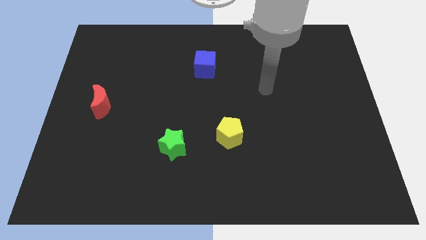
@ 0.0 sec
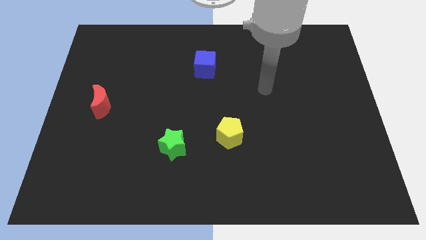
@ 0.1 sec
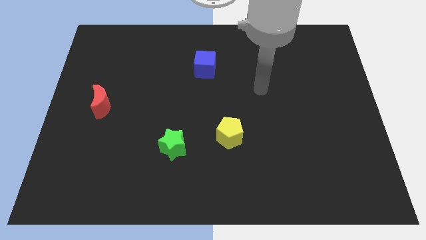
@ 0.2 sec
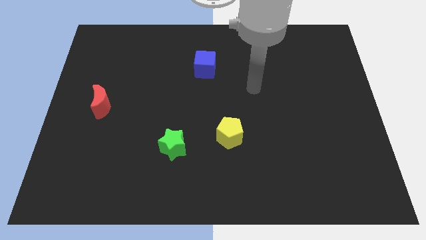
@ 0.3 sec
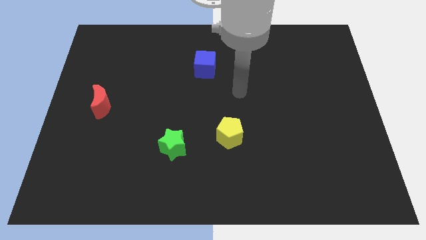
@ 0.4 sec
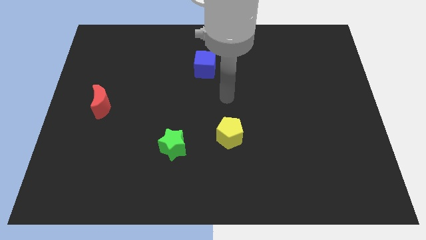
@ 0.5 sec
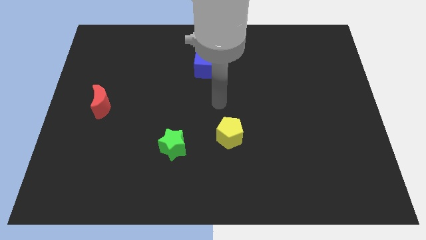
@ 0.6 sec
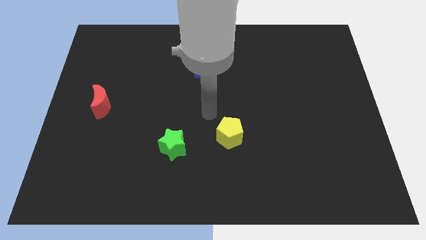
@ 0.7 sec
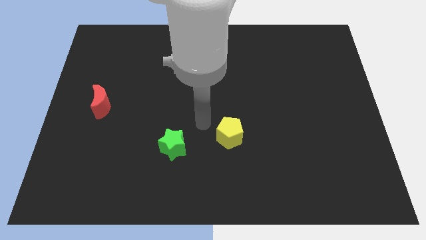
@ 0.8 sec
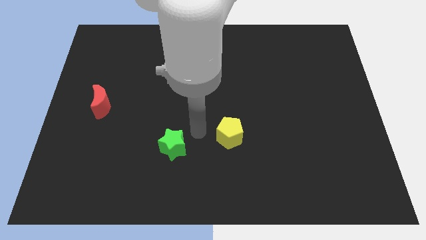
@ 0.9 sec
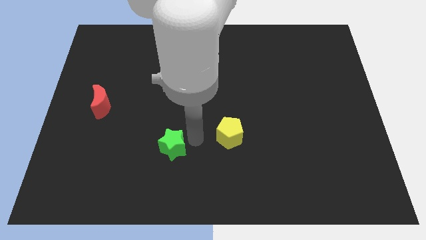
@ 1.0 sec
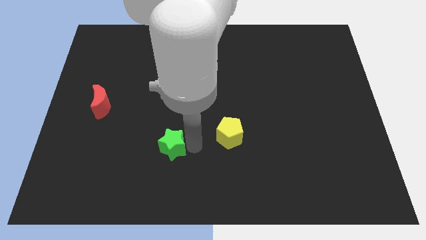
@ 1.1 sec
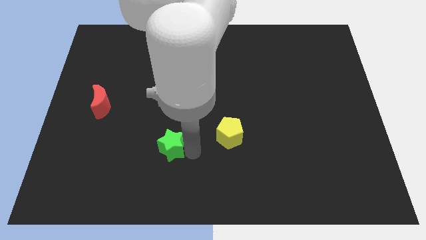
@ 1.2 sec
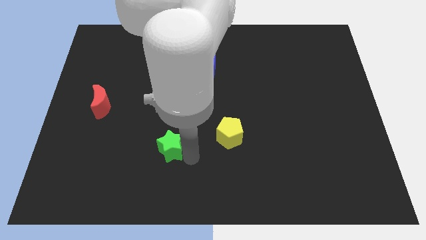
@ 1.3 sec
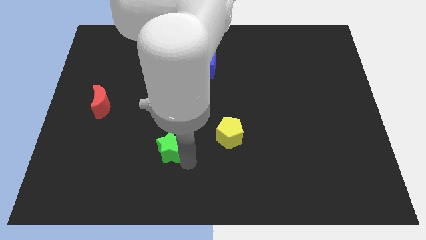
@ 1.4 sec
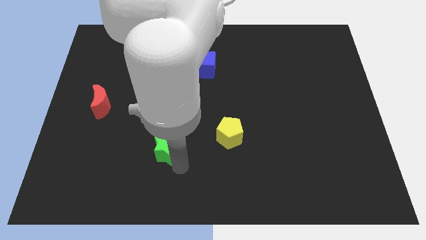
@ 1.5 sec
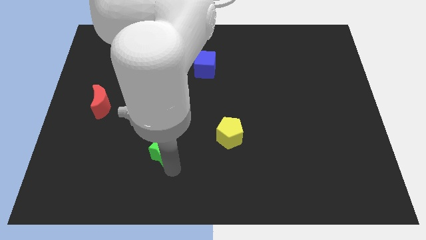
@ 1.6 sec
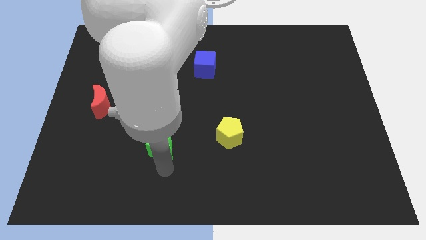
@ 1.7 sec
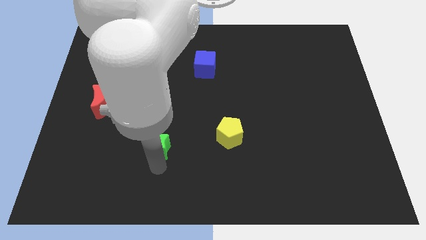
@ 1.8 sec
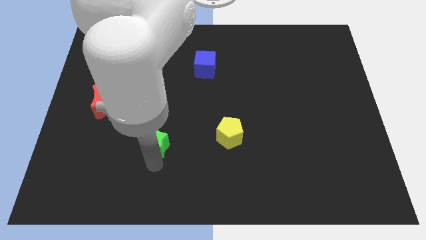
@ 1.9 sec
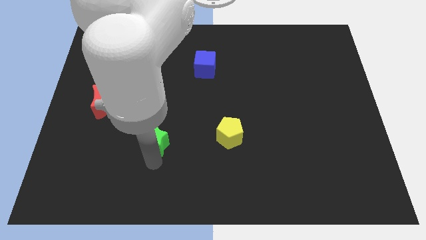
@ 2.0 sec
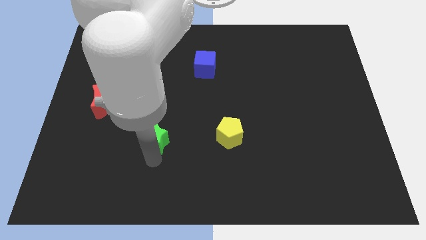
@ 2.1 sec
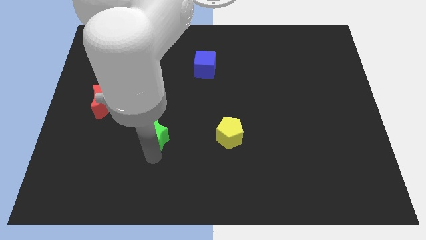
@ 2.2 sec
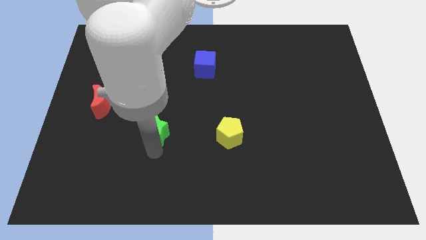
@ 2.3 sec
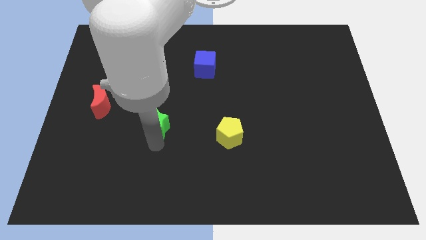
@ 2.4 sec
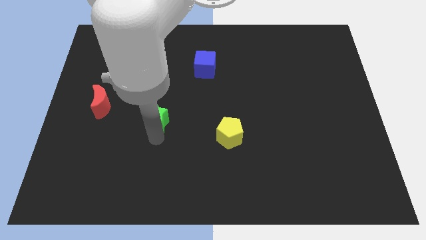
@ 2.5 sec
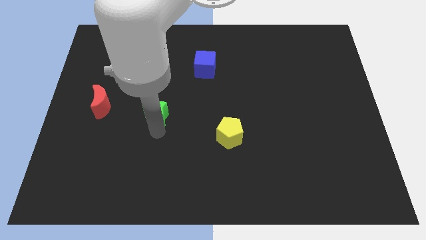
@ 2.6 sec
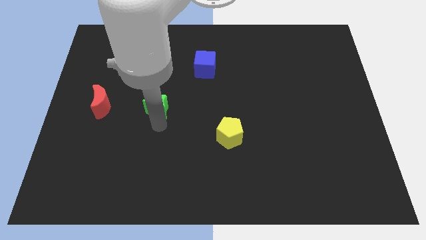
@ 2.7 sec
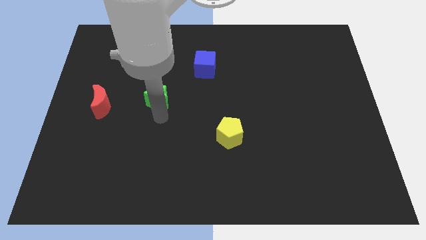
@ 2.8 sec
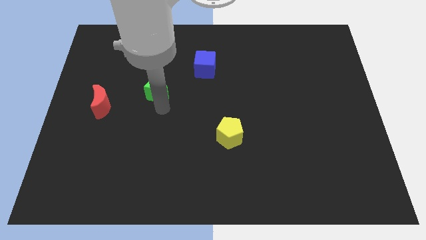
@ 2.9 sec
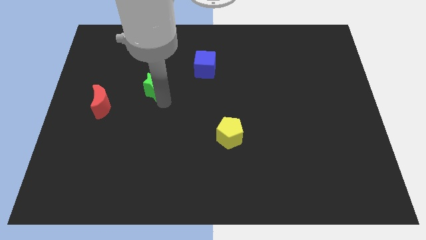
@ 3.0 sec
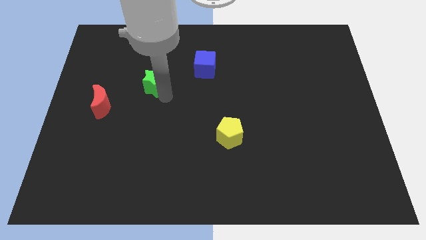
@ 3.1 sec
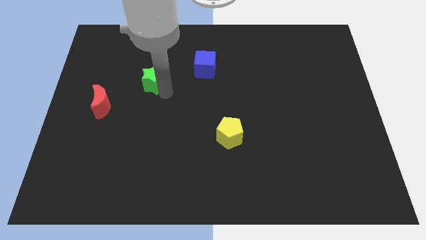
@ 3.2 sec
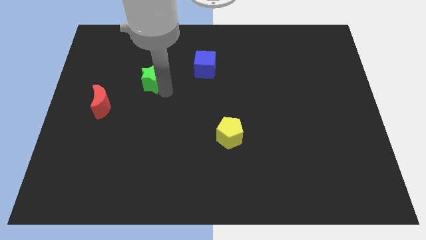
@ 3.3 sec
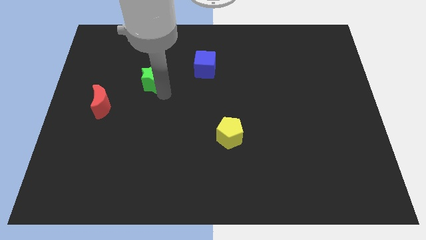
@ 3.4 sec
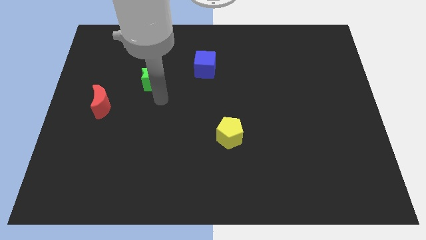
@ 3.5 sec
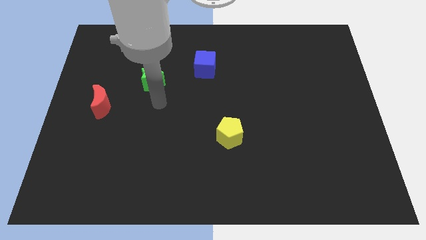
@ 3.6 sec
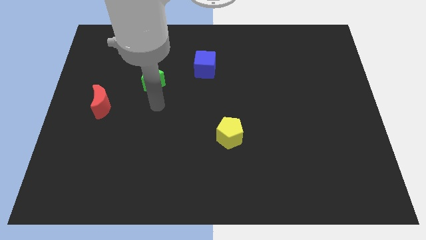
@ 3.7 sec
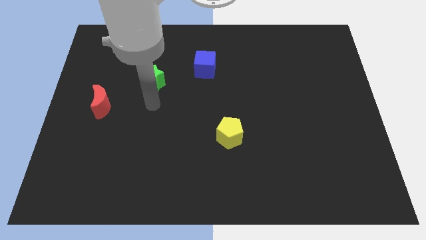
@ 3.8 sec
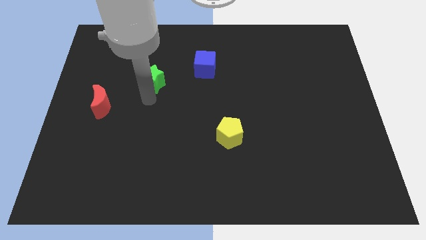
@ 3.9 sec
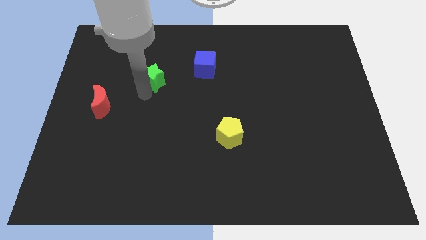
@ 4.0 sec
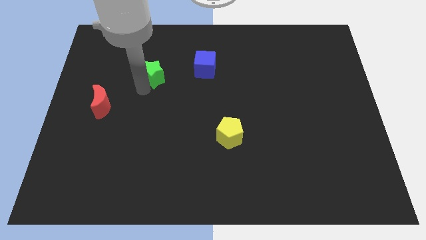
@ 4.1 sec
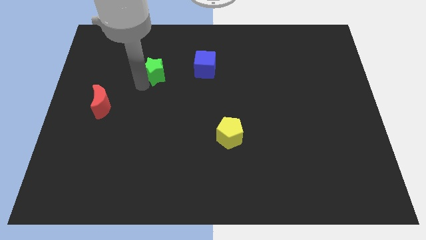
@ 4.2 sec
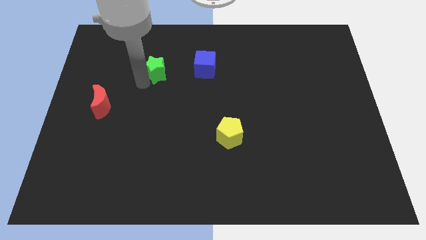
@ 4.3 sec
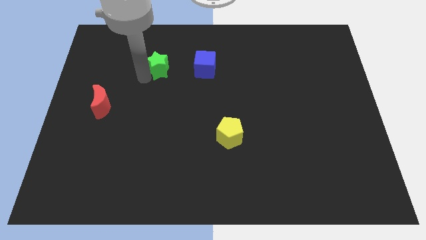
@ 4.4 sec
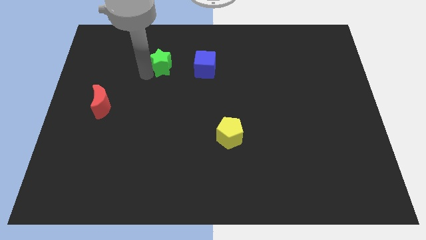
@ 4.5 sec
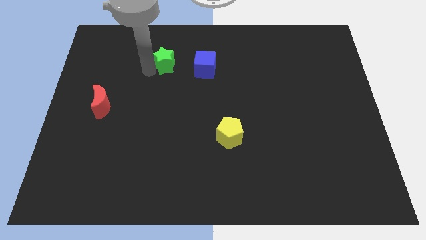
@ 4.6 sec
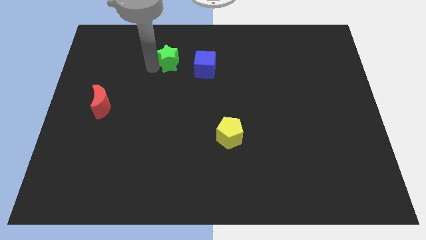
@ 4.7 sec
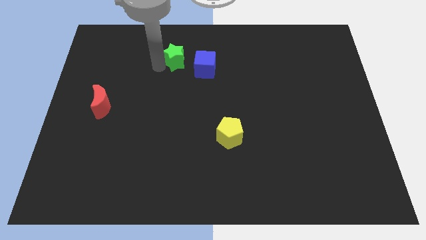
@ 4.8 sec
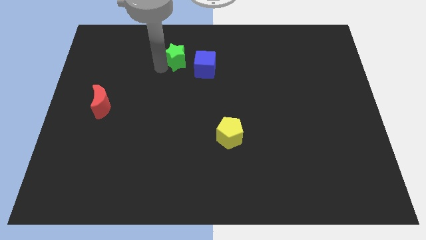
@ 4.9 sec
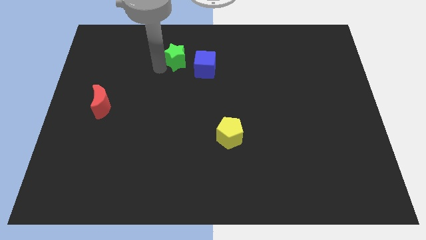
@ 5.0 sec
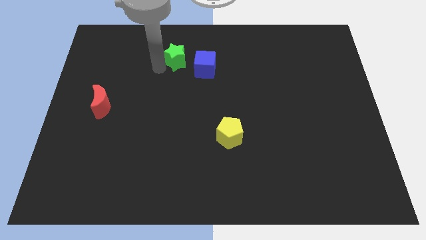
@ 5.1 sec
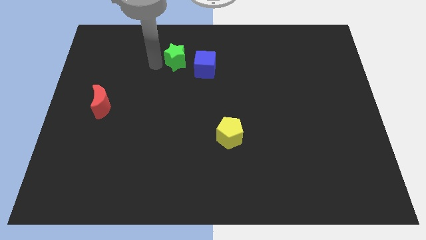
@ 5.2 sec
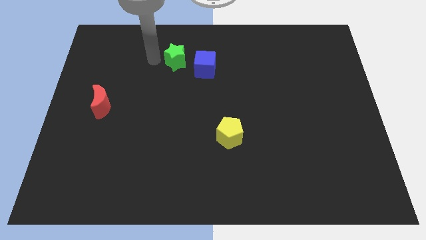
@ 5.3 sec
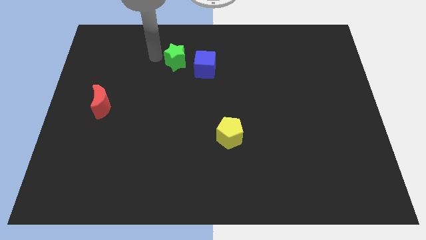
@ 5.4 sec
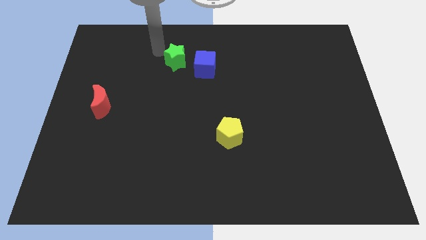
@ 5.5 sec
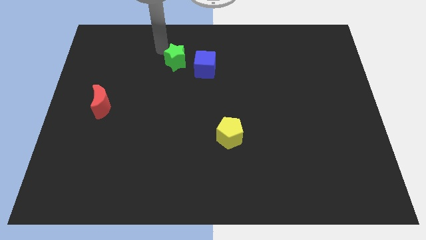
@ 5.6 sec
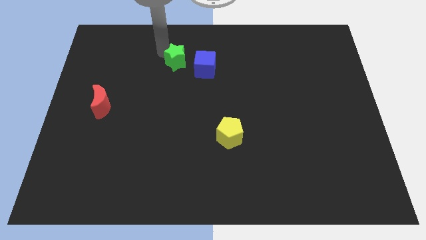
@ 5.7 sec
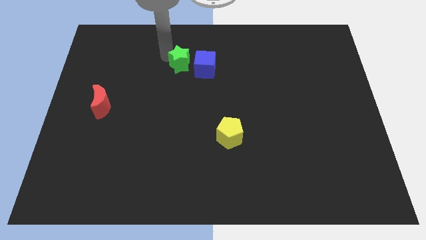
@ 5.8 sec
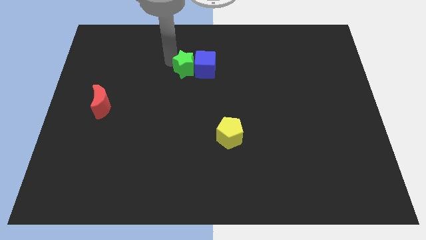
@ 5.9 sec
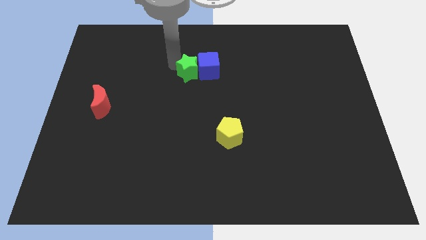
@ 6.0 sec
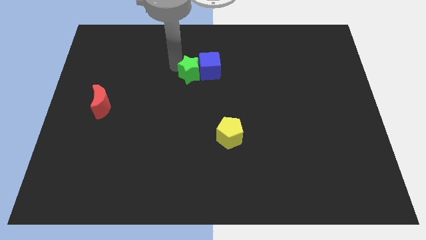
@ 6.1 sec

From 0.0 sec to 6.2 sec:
put the star to the blue cube

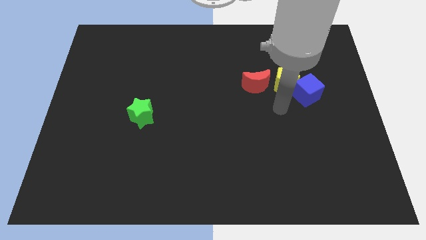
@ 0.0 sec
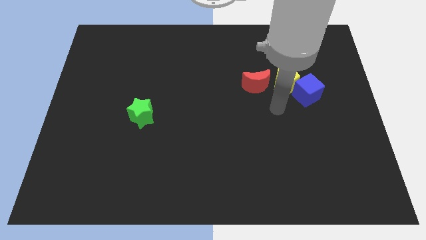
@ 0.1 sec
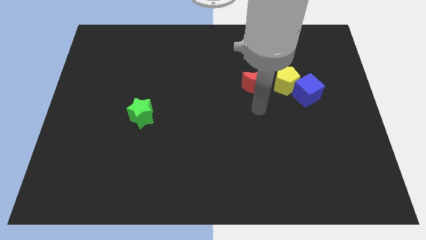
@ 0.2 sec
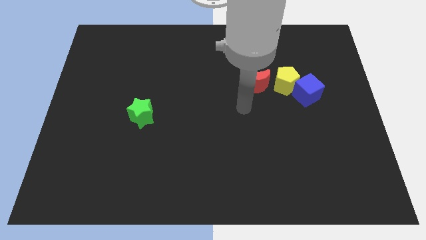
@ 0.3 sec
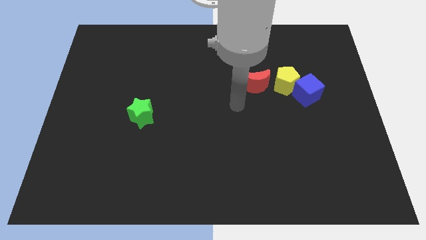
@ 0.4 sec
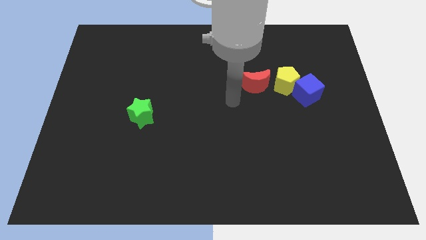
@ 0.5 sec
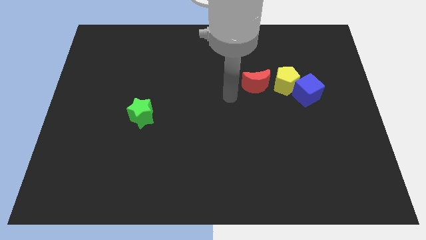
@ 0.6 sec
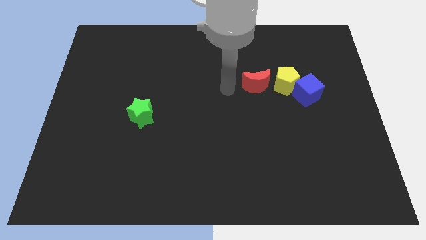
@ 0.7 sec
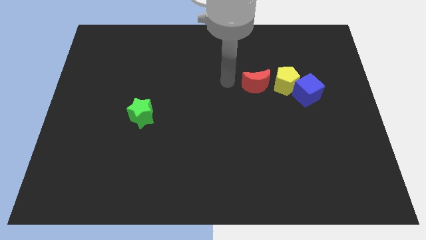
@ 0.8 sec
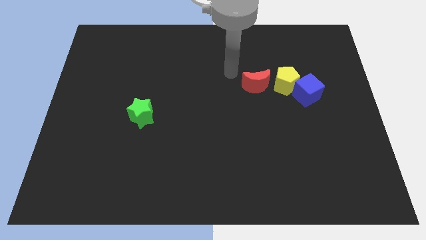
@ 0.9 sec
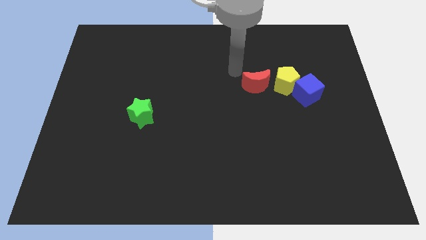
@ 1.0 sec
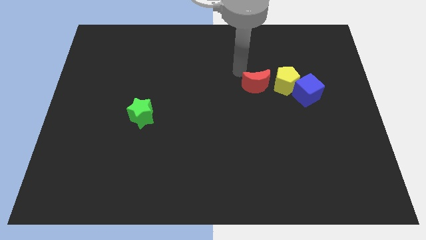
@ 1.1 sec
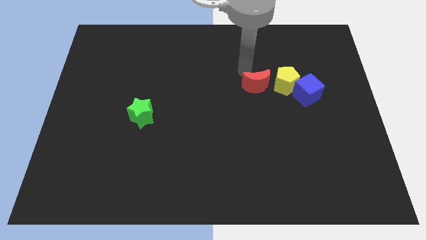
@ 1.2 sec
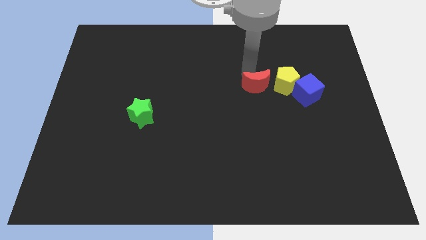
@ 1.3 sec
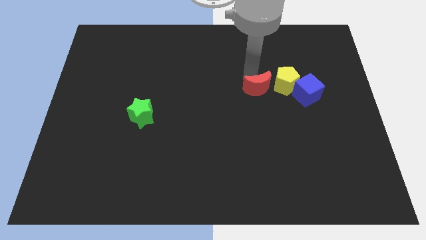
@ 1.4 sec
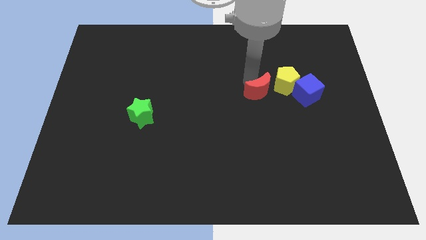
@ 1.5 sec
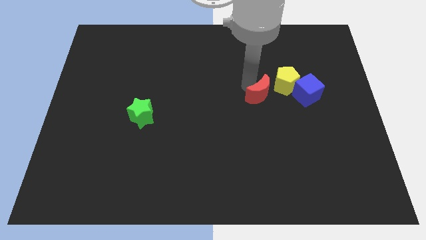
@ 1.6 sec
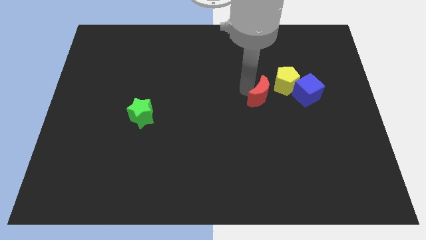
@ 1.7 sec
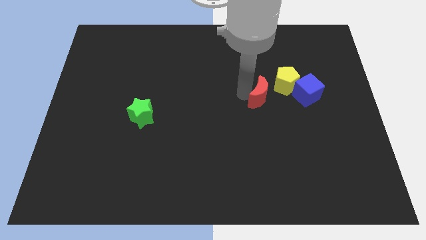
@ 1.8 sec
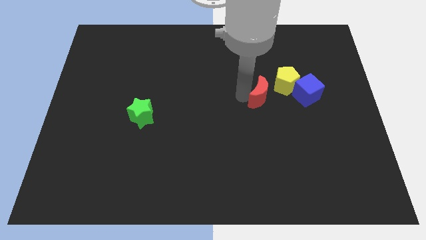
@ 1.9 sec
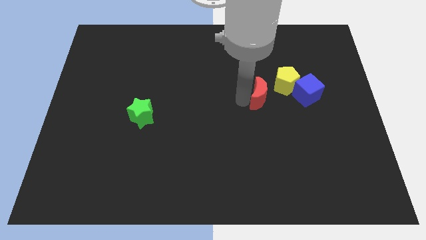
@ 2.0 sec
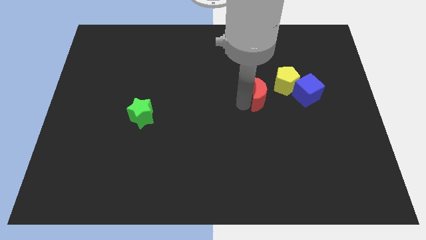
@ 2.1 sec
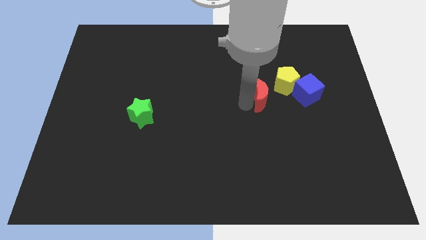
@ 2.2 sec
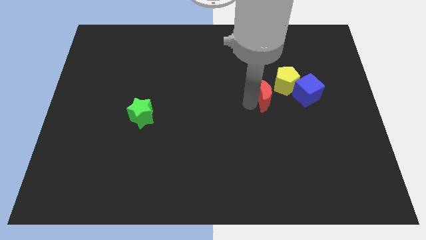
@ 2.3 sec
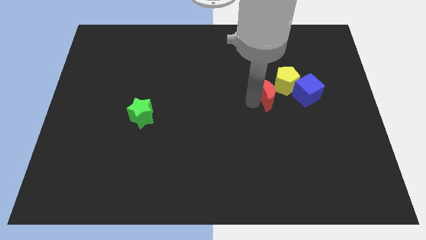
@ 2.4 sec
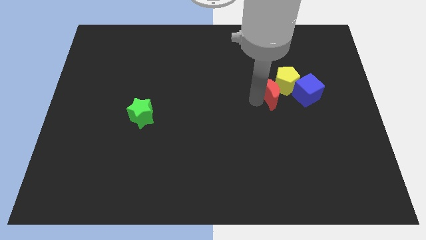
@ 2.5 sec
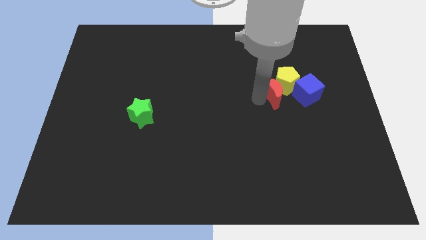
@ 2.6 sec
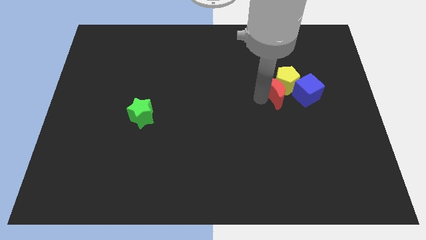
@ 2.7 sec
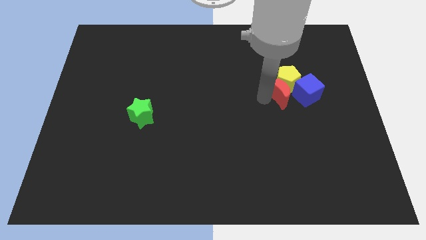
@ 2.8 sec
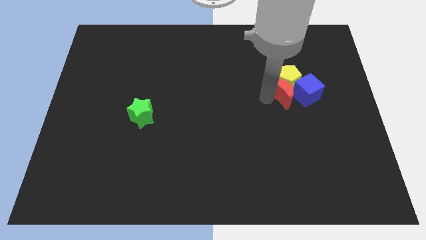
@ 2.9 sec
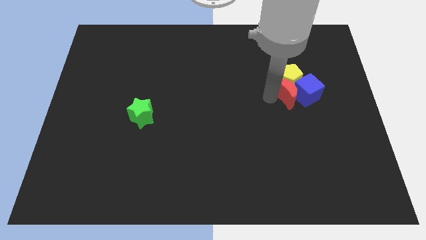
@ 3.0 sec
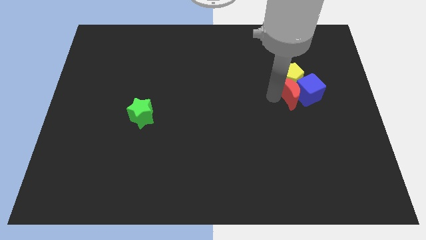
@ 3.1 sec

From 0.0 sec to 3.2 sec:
push the red block next to the cube
